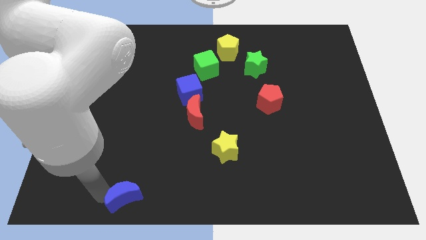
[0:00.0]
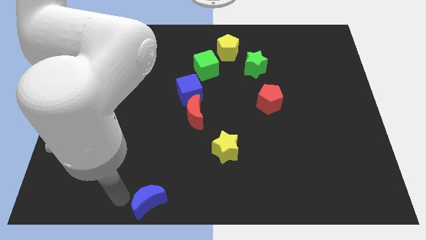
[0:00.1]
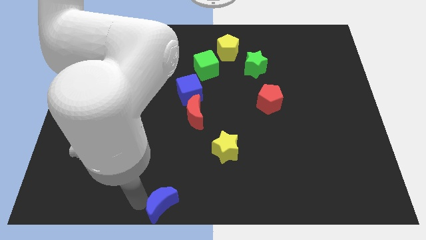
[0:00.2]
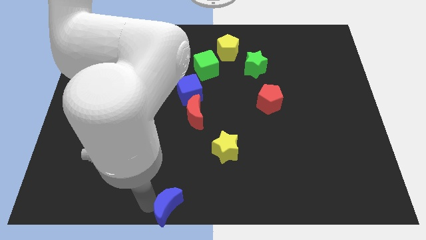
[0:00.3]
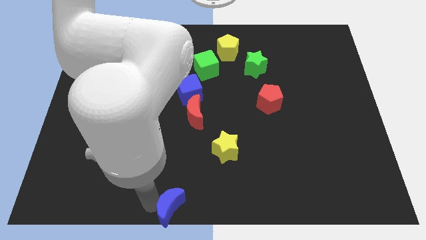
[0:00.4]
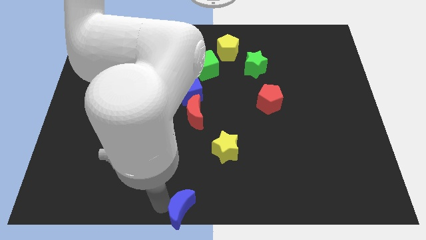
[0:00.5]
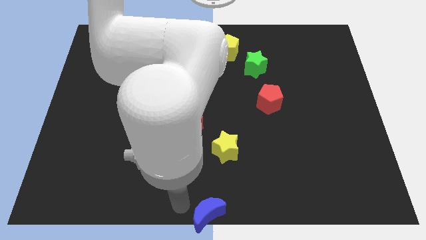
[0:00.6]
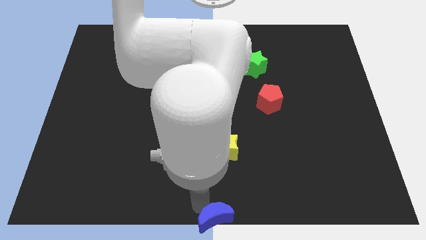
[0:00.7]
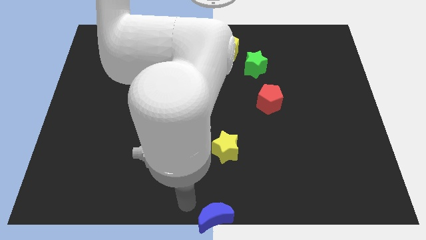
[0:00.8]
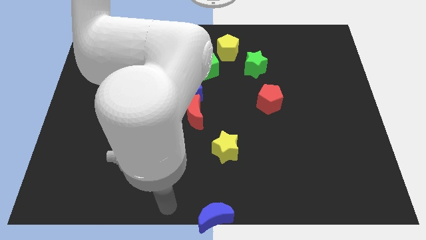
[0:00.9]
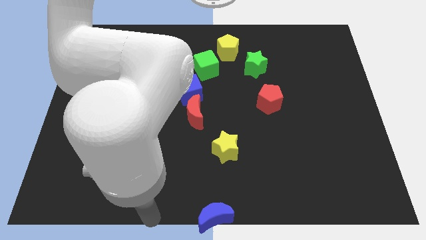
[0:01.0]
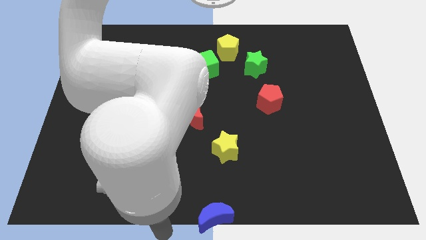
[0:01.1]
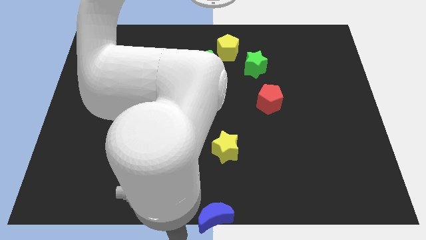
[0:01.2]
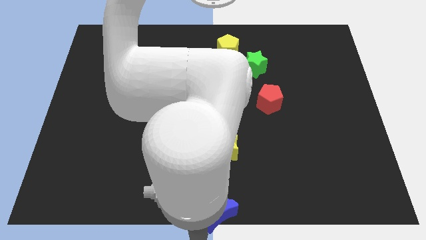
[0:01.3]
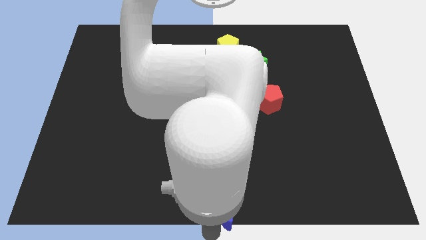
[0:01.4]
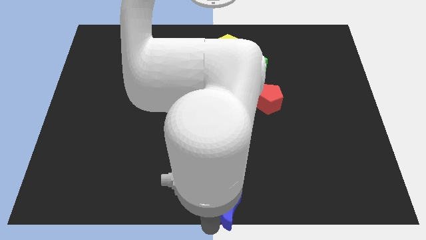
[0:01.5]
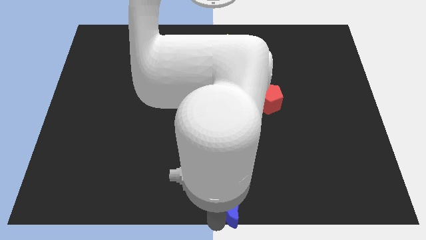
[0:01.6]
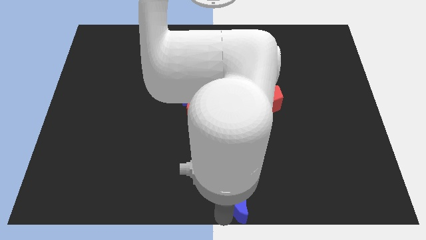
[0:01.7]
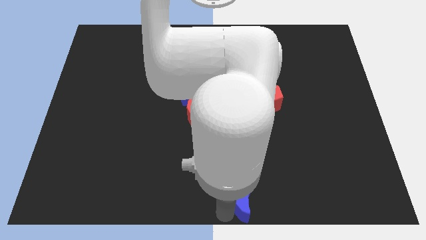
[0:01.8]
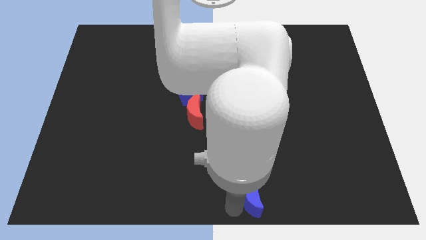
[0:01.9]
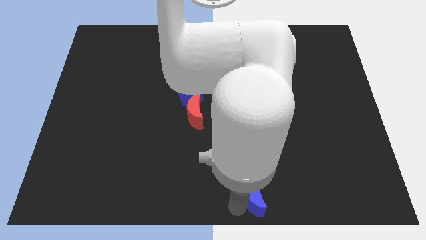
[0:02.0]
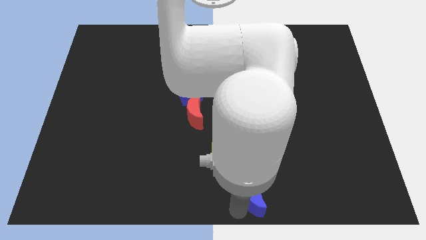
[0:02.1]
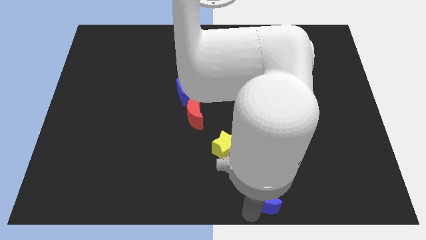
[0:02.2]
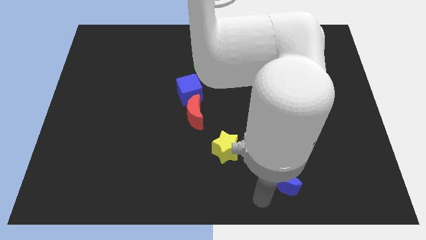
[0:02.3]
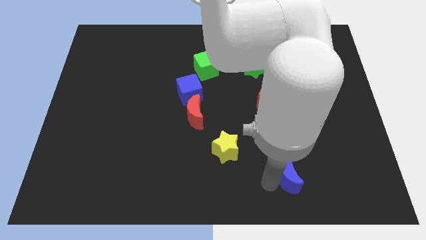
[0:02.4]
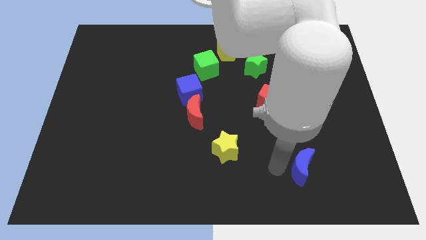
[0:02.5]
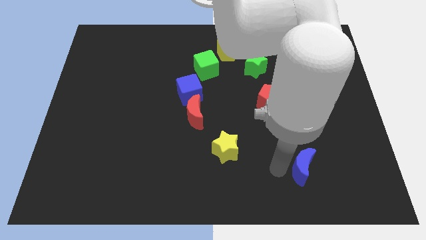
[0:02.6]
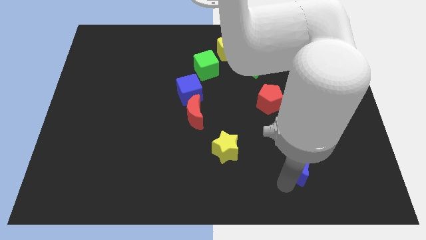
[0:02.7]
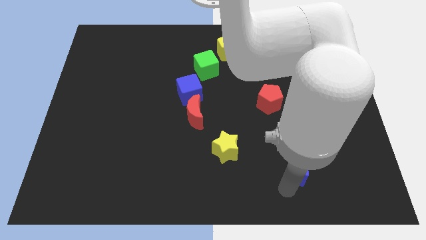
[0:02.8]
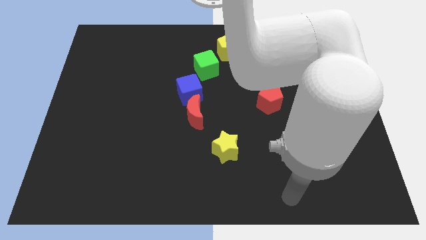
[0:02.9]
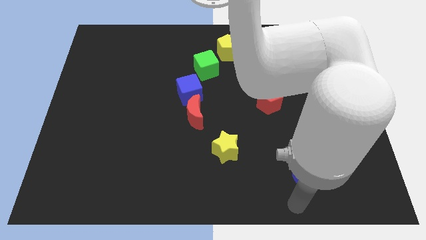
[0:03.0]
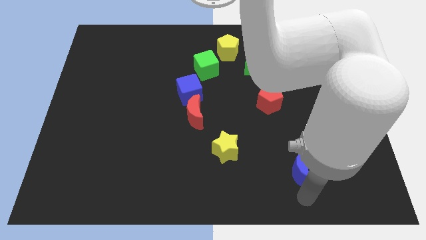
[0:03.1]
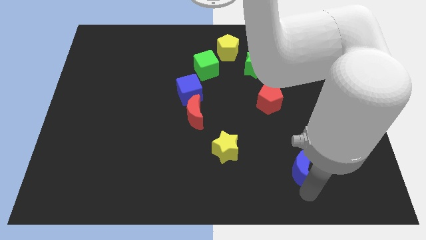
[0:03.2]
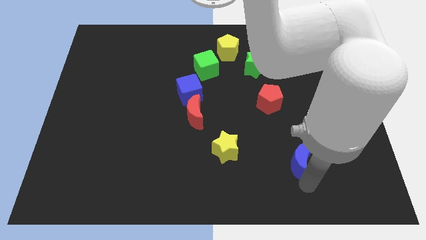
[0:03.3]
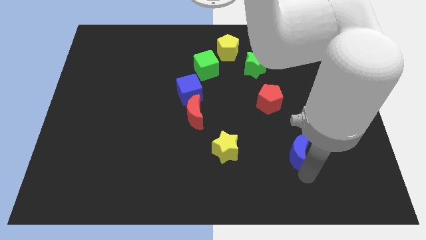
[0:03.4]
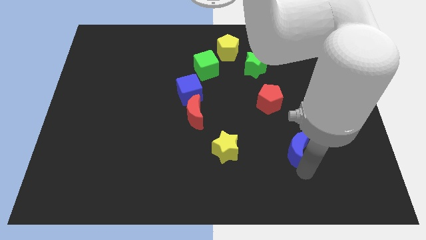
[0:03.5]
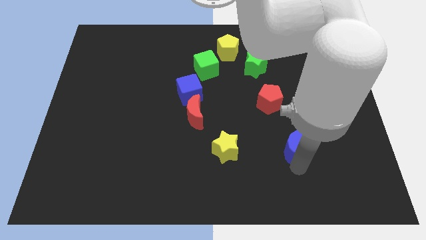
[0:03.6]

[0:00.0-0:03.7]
slide the blue moon horizontally to the right side of the yellow star

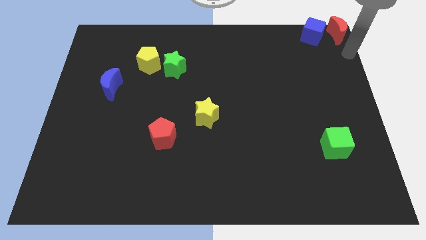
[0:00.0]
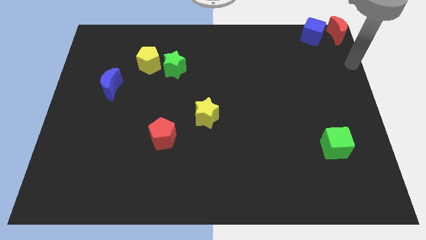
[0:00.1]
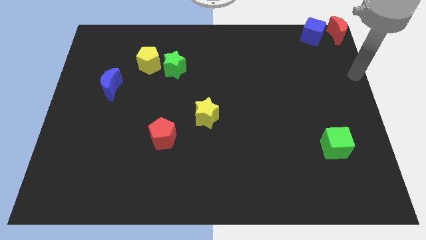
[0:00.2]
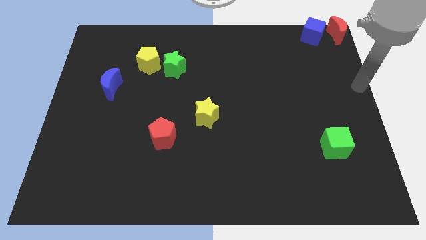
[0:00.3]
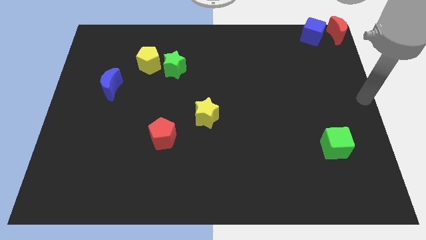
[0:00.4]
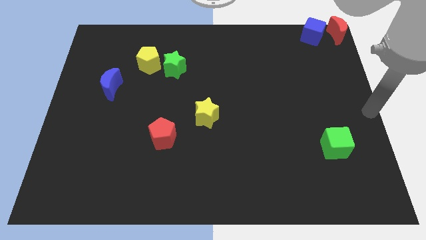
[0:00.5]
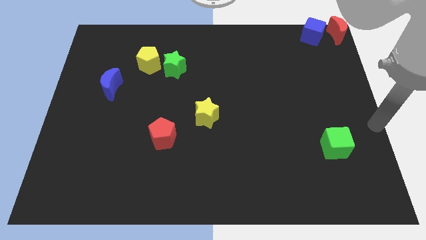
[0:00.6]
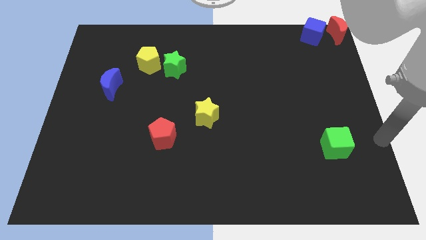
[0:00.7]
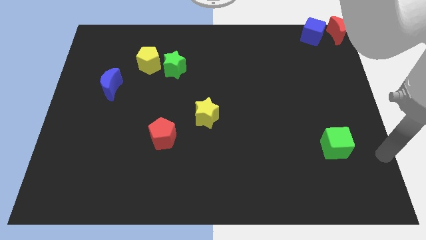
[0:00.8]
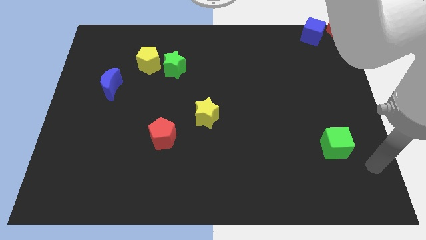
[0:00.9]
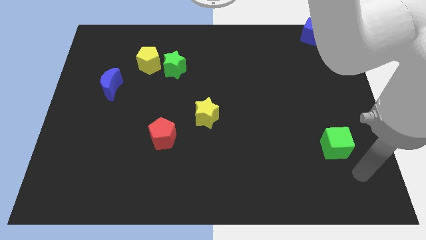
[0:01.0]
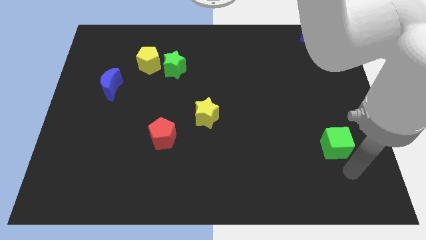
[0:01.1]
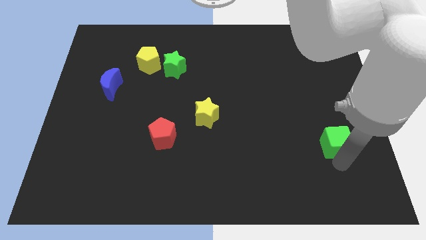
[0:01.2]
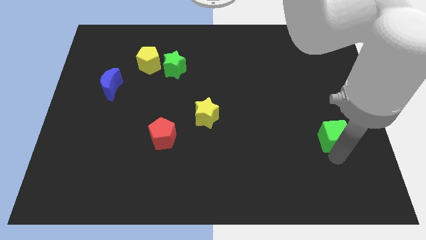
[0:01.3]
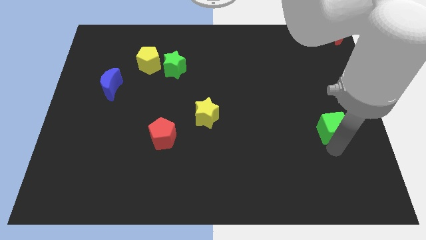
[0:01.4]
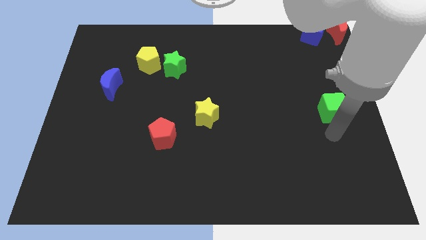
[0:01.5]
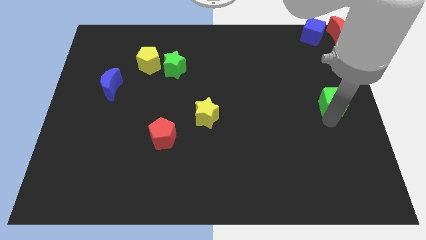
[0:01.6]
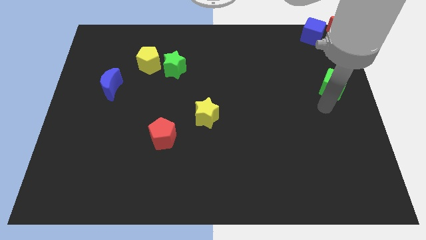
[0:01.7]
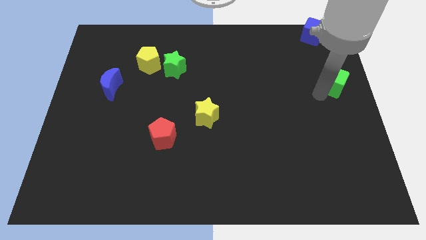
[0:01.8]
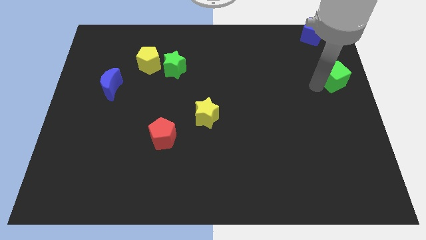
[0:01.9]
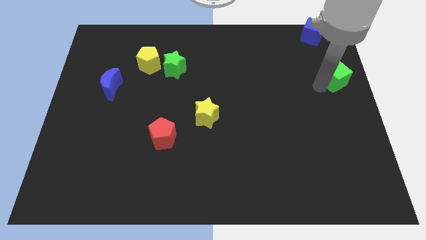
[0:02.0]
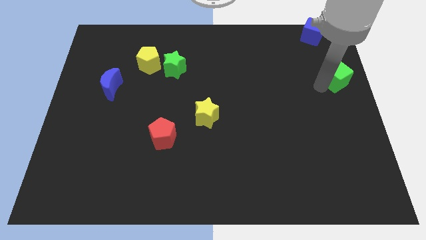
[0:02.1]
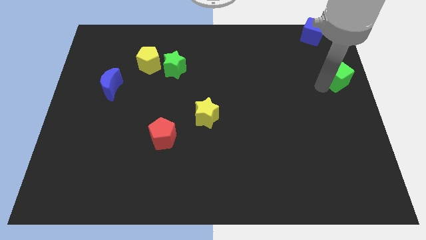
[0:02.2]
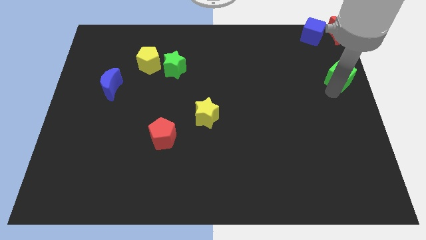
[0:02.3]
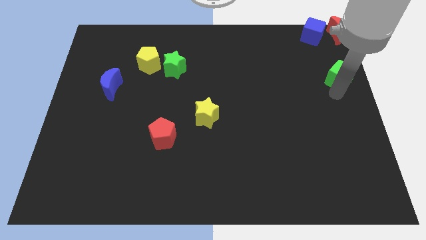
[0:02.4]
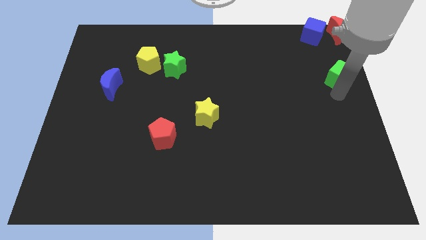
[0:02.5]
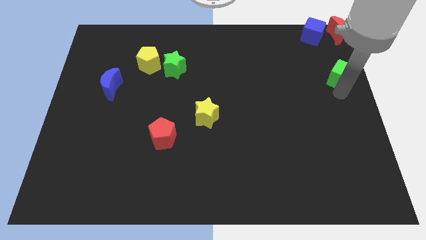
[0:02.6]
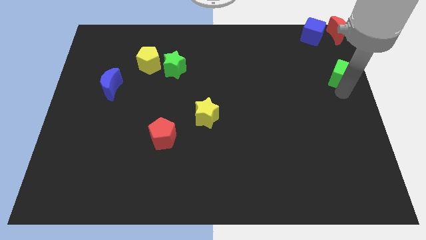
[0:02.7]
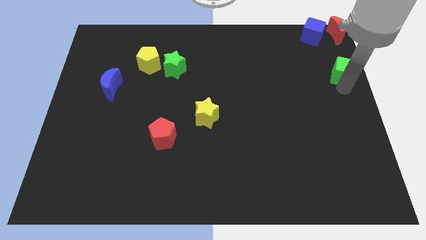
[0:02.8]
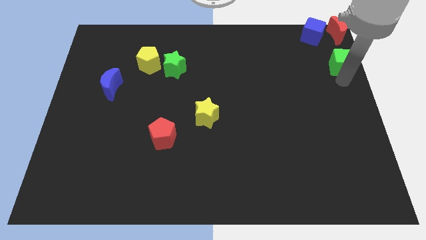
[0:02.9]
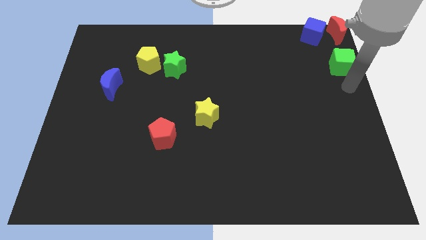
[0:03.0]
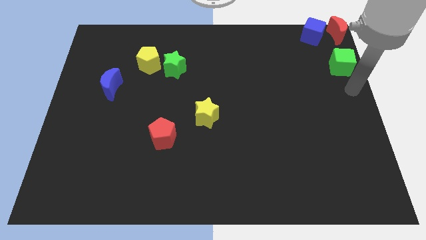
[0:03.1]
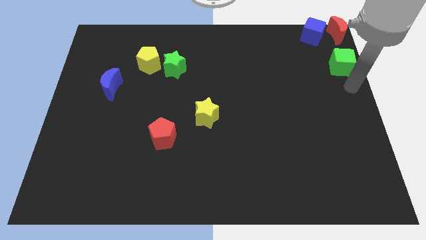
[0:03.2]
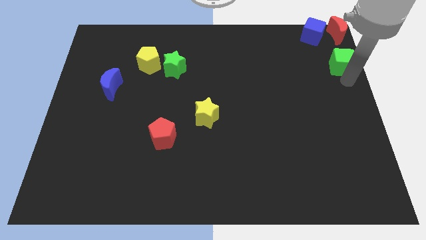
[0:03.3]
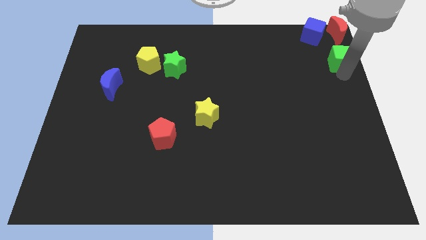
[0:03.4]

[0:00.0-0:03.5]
move green cube towards red crescent

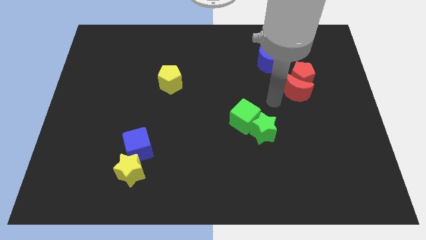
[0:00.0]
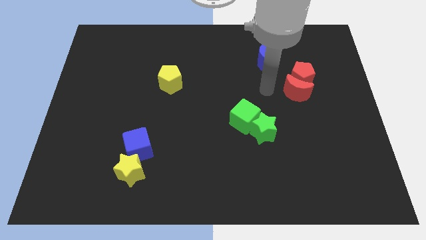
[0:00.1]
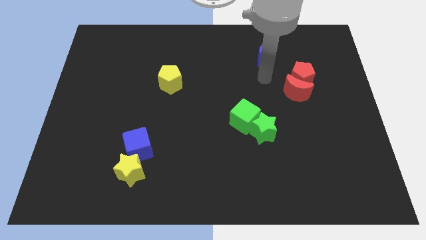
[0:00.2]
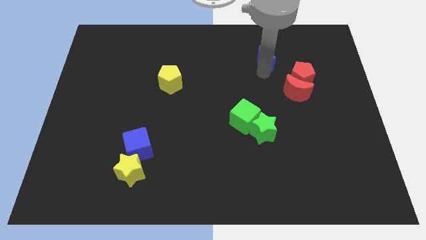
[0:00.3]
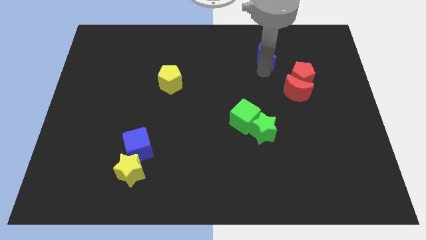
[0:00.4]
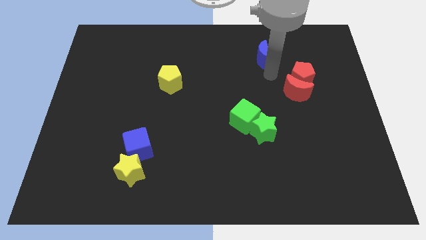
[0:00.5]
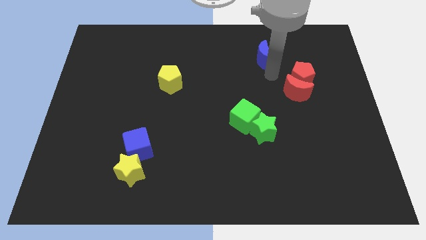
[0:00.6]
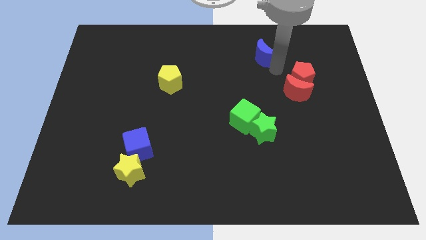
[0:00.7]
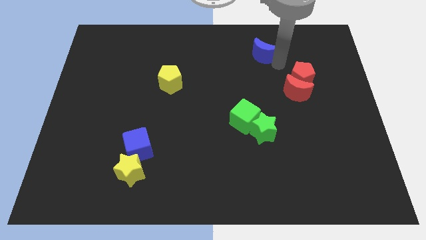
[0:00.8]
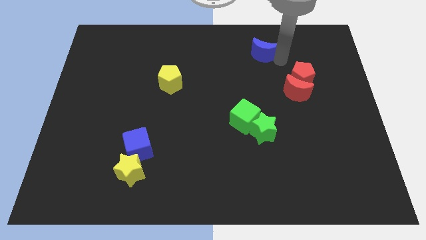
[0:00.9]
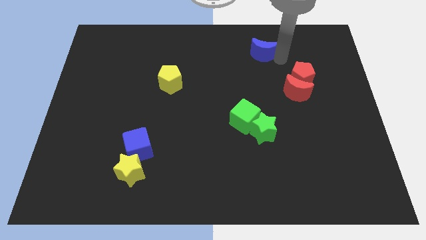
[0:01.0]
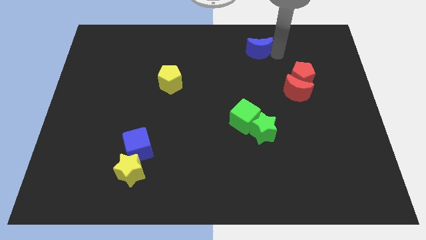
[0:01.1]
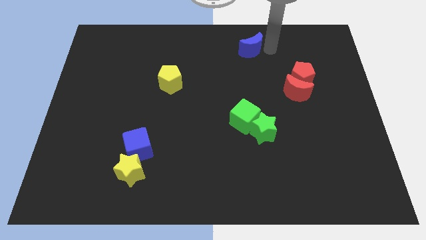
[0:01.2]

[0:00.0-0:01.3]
slightly move the blue crescent to the top center of the board

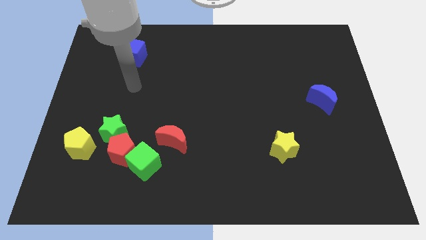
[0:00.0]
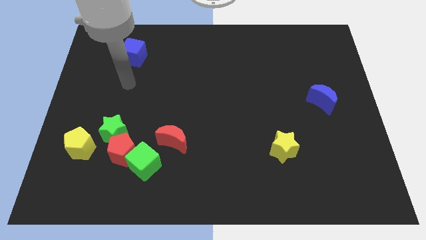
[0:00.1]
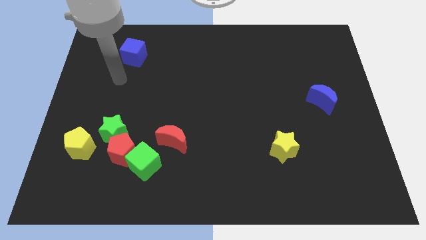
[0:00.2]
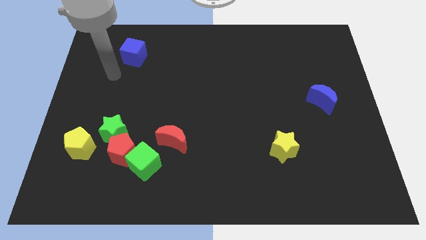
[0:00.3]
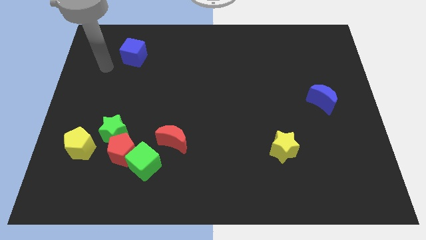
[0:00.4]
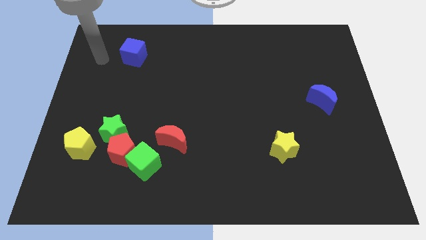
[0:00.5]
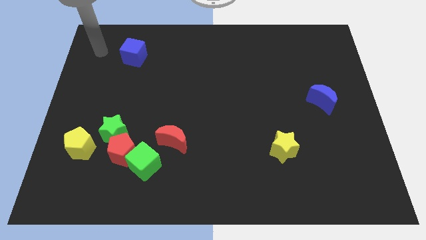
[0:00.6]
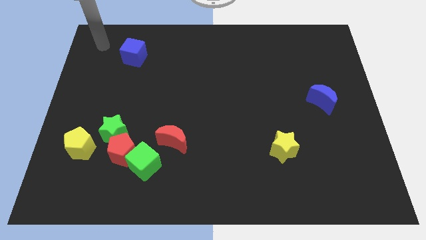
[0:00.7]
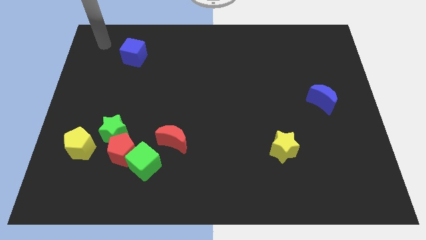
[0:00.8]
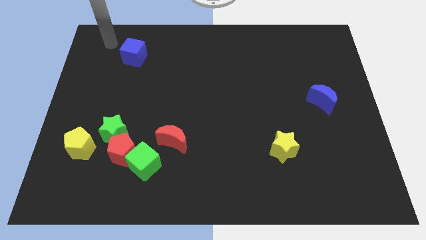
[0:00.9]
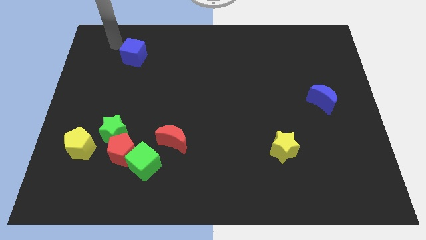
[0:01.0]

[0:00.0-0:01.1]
move arm near blue cube
